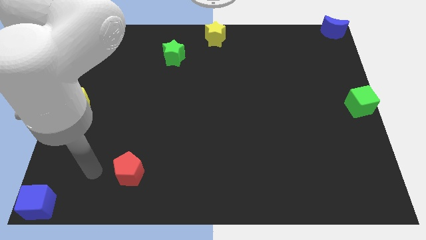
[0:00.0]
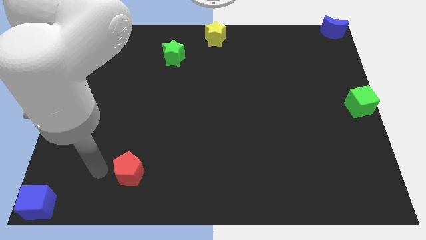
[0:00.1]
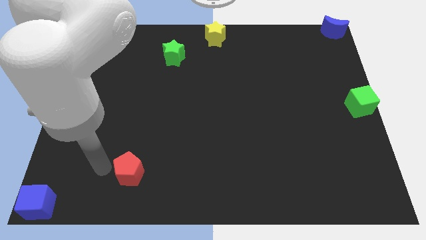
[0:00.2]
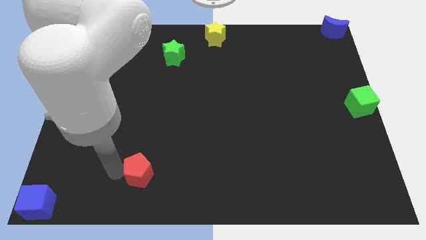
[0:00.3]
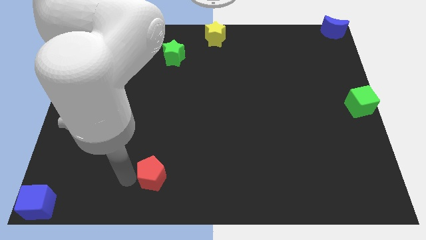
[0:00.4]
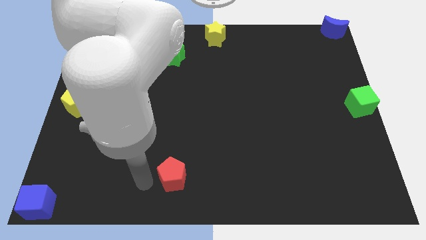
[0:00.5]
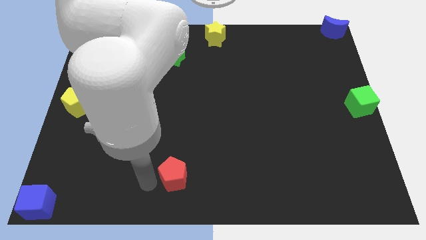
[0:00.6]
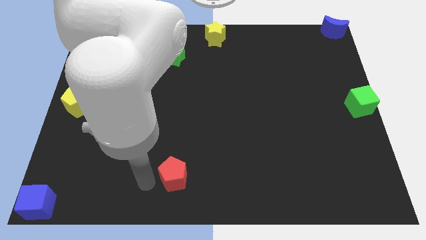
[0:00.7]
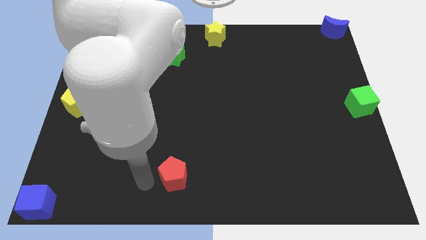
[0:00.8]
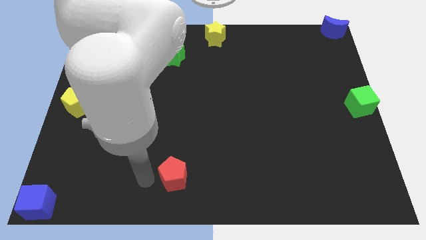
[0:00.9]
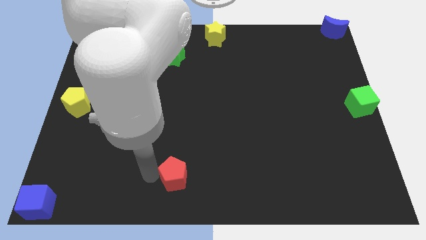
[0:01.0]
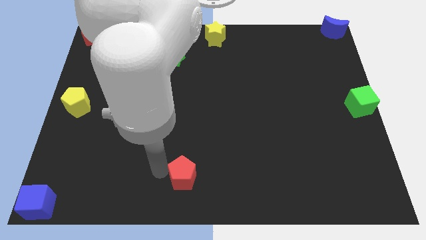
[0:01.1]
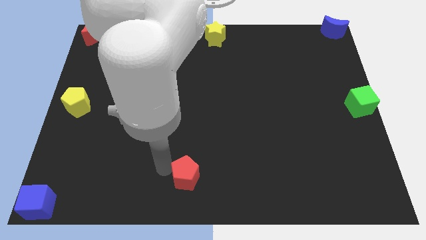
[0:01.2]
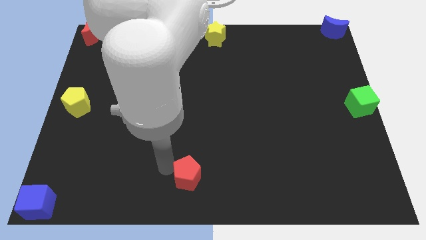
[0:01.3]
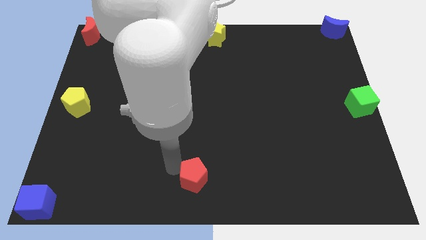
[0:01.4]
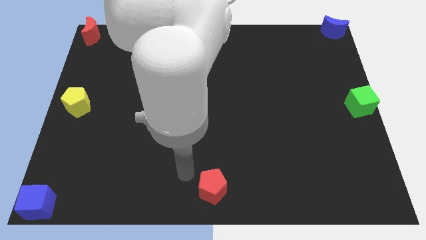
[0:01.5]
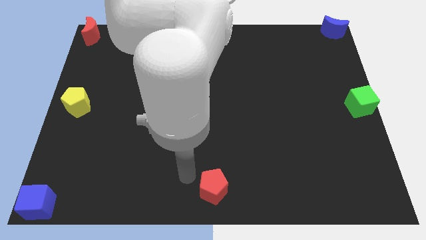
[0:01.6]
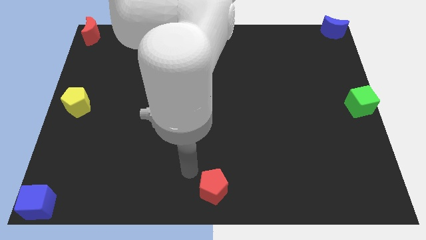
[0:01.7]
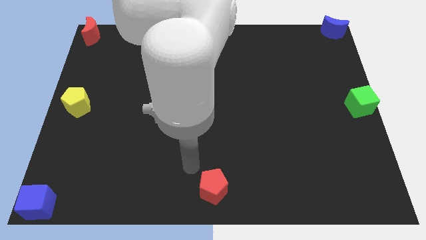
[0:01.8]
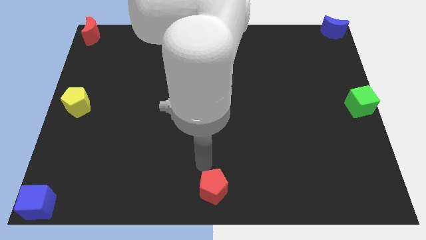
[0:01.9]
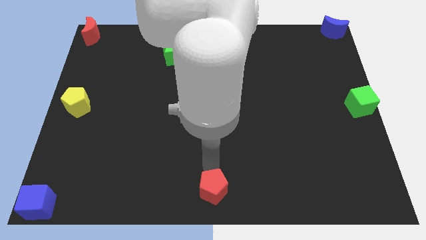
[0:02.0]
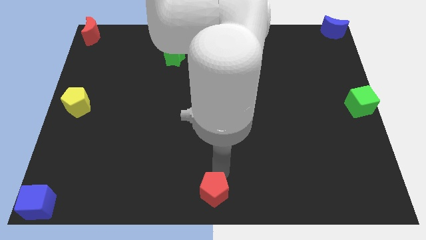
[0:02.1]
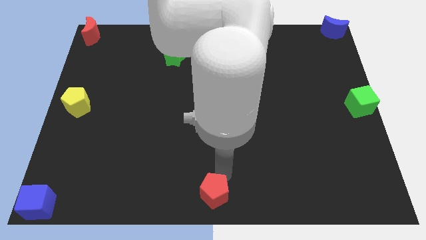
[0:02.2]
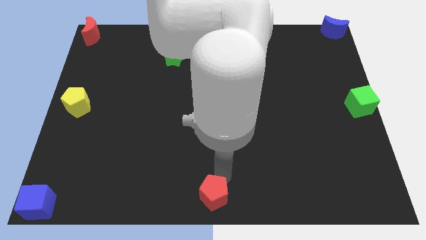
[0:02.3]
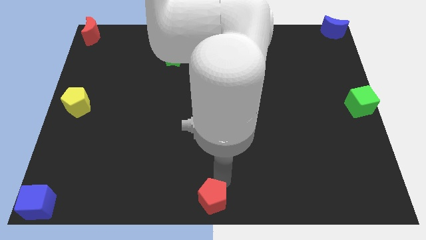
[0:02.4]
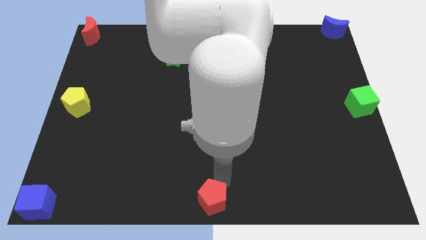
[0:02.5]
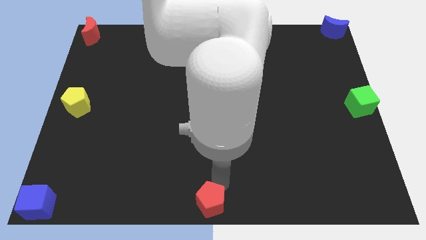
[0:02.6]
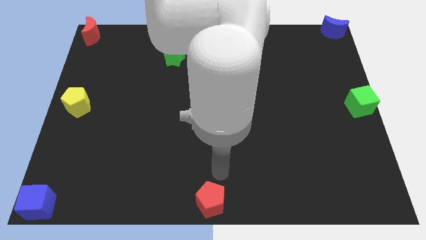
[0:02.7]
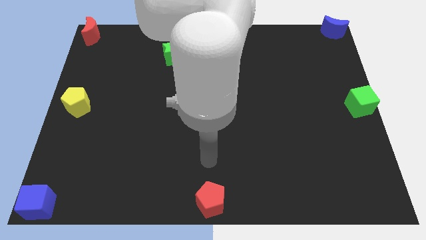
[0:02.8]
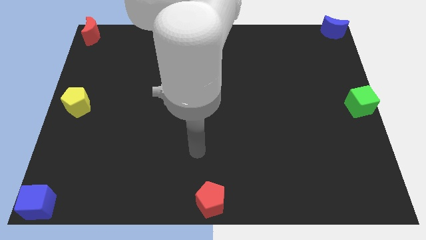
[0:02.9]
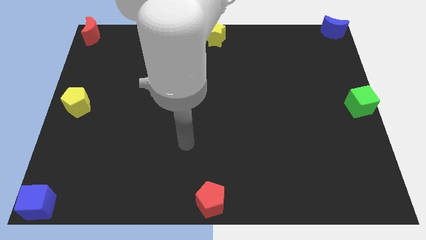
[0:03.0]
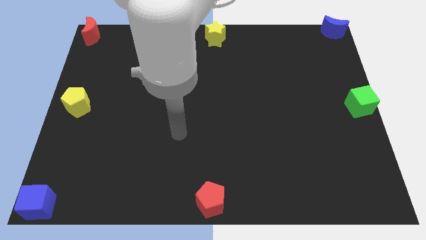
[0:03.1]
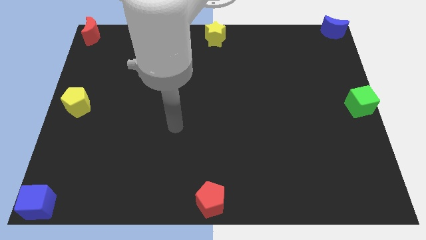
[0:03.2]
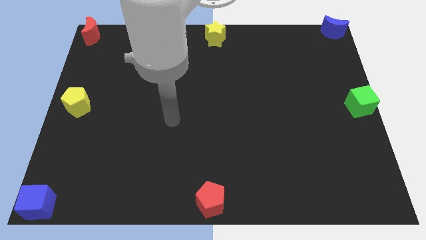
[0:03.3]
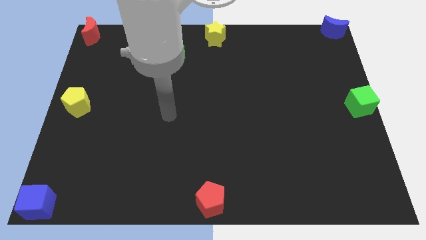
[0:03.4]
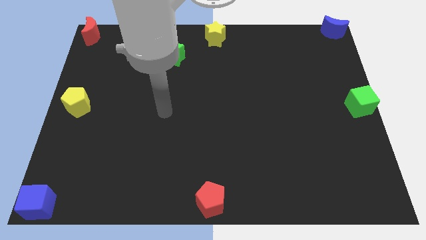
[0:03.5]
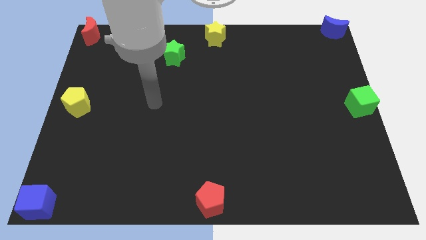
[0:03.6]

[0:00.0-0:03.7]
push the red pentagon to the bottom center of the board

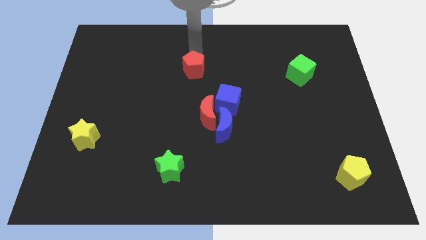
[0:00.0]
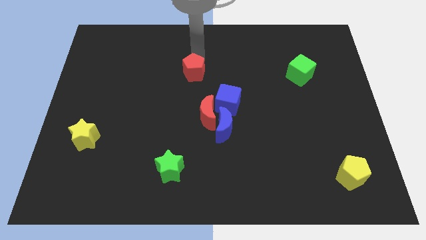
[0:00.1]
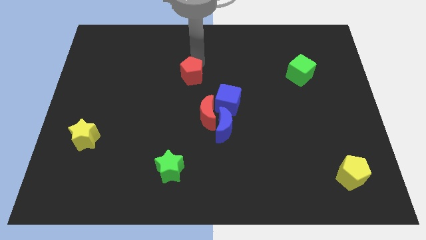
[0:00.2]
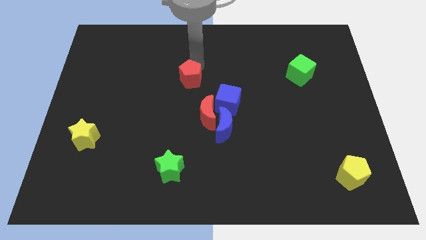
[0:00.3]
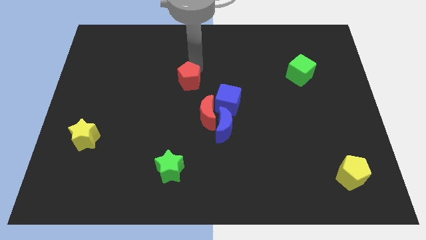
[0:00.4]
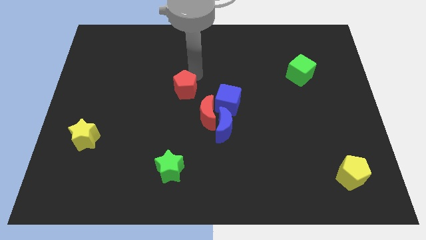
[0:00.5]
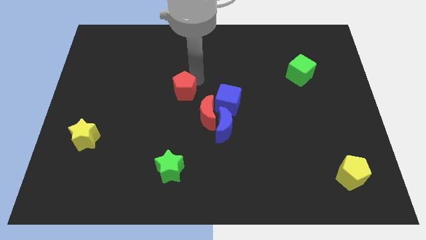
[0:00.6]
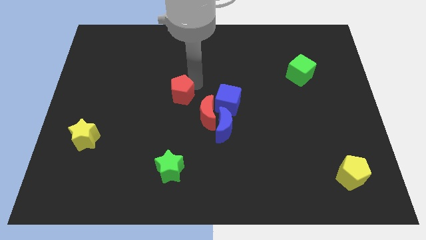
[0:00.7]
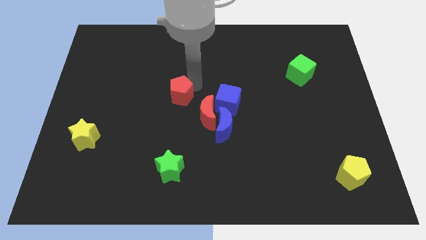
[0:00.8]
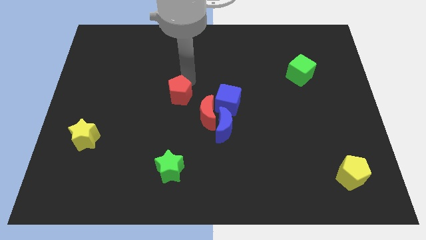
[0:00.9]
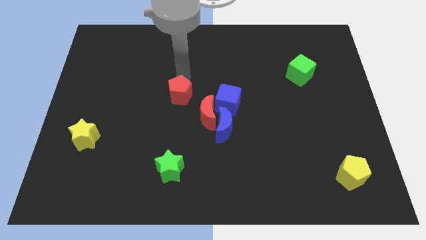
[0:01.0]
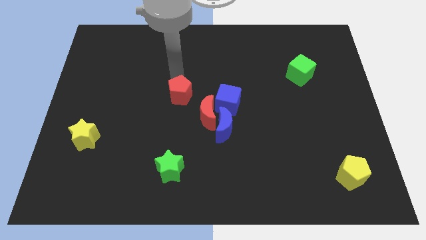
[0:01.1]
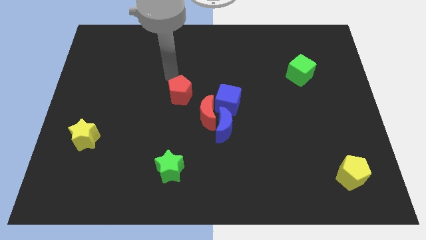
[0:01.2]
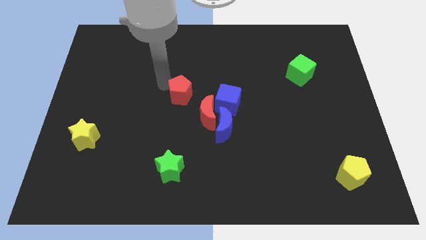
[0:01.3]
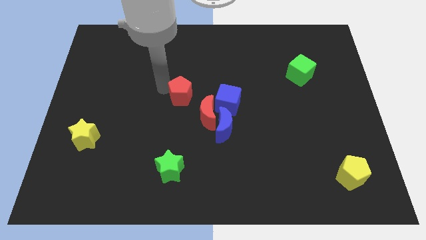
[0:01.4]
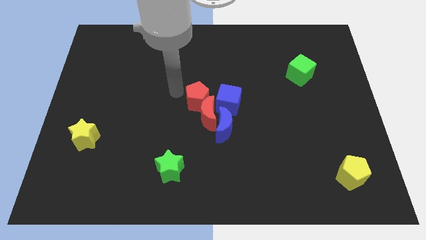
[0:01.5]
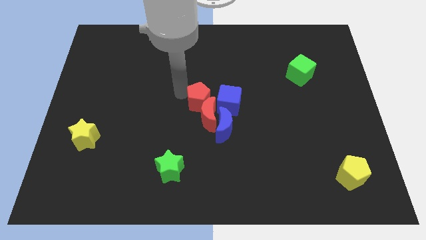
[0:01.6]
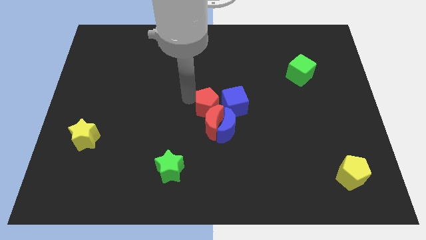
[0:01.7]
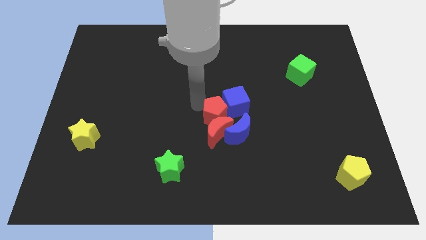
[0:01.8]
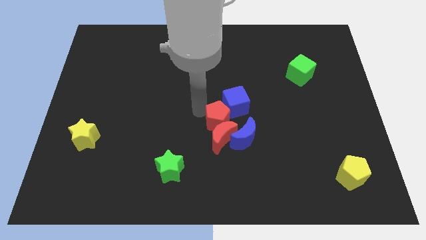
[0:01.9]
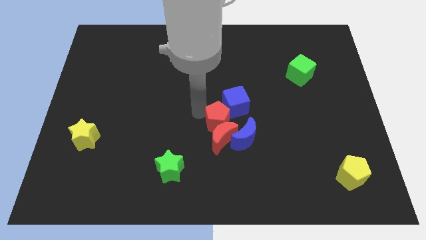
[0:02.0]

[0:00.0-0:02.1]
push red pentagon into red moon

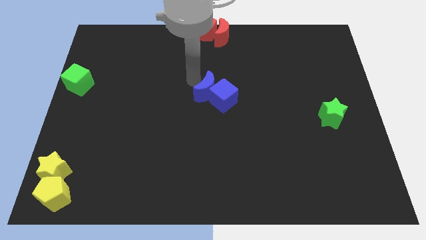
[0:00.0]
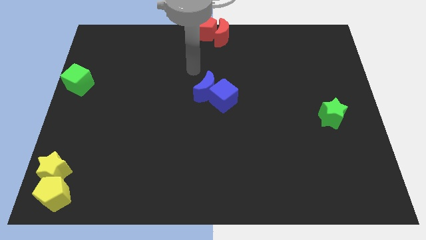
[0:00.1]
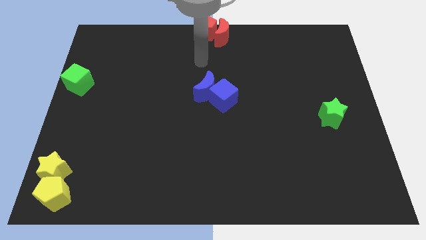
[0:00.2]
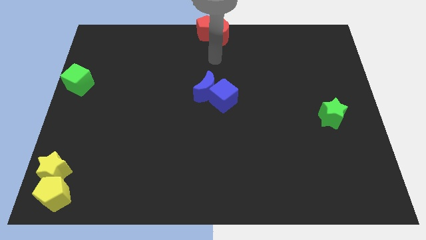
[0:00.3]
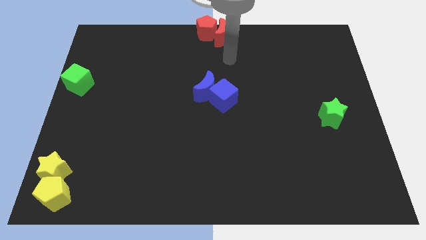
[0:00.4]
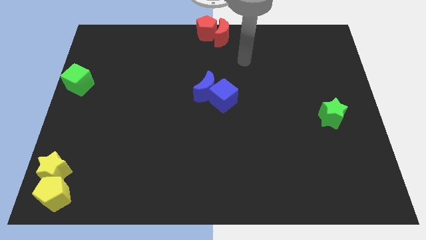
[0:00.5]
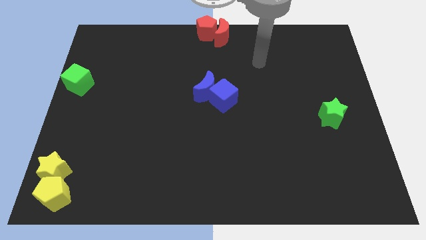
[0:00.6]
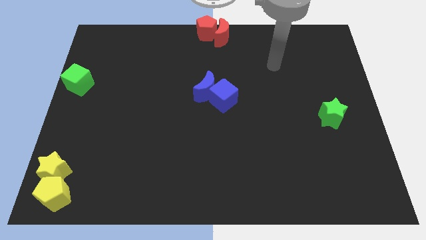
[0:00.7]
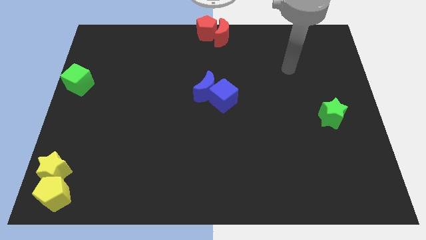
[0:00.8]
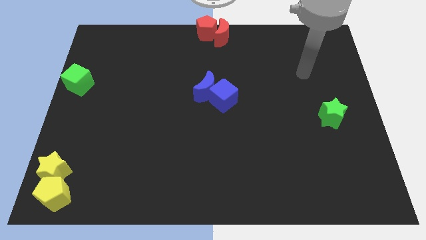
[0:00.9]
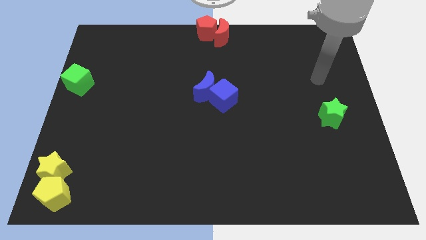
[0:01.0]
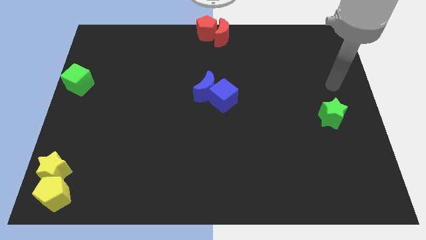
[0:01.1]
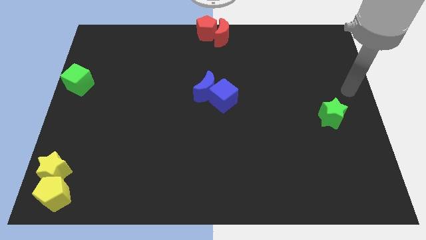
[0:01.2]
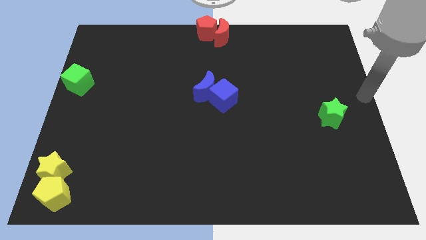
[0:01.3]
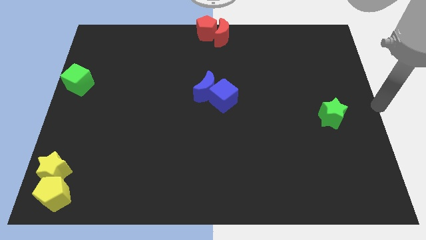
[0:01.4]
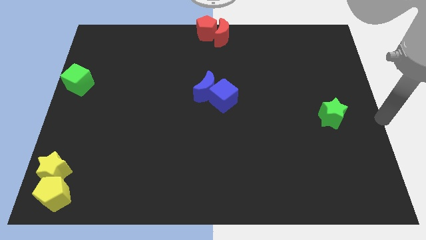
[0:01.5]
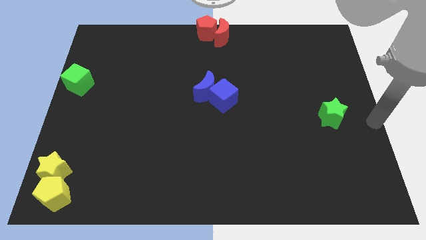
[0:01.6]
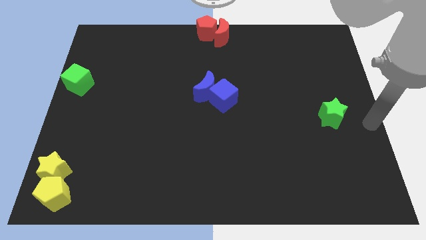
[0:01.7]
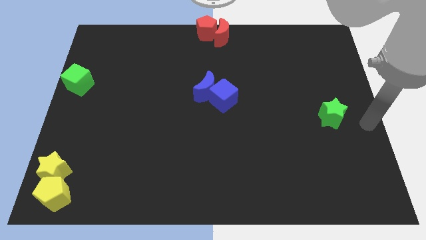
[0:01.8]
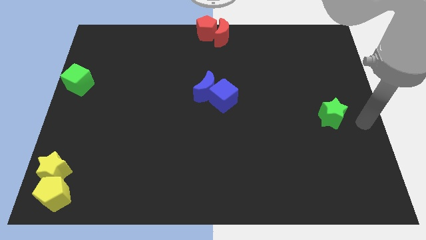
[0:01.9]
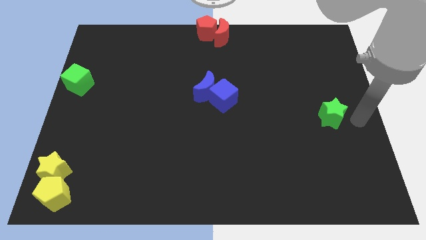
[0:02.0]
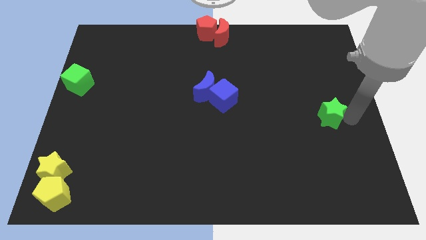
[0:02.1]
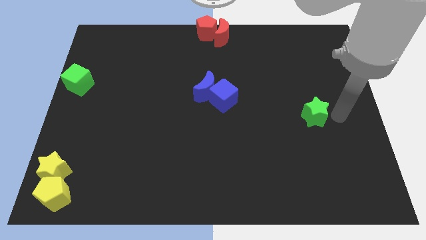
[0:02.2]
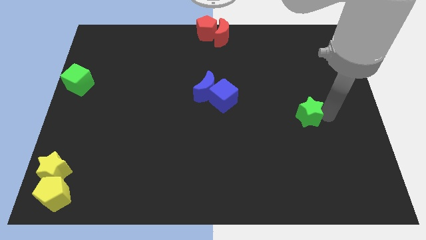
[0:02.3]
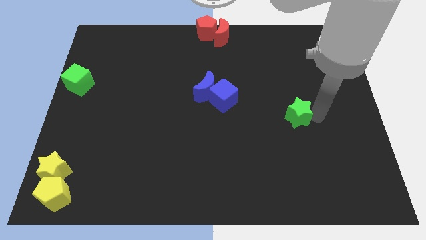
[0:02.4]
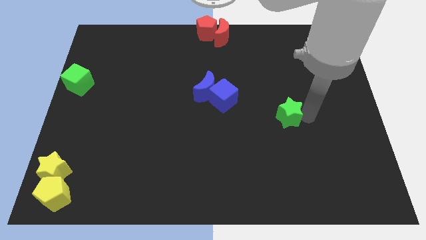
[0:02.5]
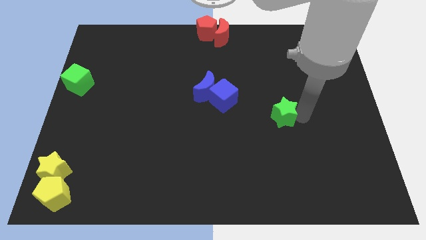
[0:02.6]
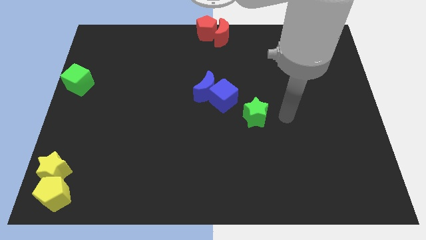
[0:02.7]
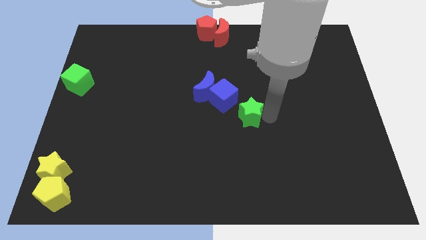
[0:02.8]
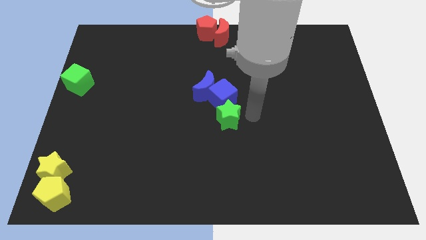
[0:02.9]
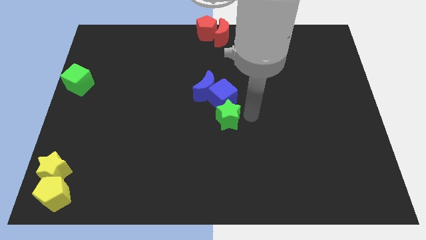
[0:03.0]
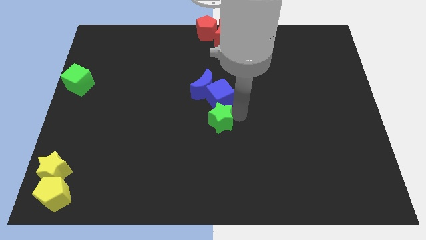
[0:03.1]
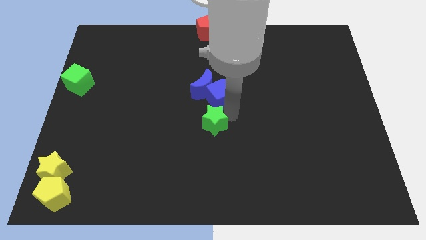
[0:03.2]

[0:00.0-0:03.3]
put the green star below the blue cube
